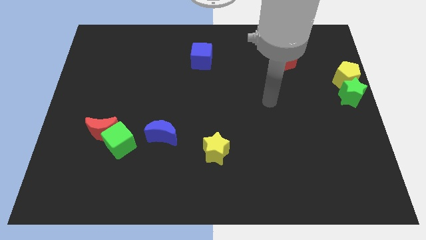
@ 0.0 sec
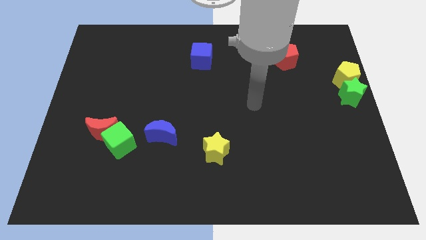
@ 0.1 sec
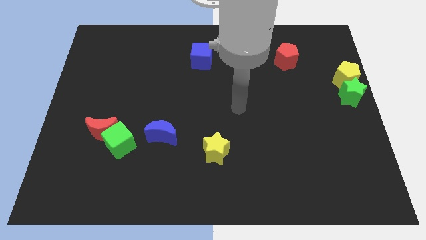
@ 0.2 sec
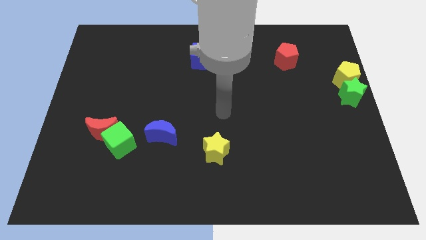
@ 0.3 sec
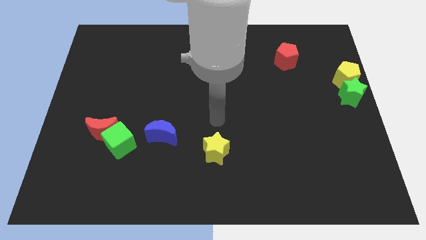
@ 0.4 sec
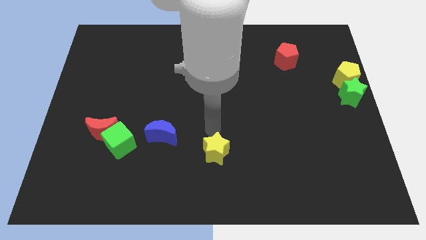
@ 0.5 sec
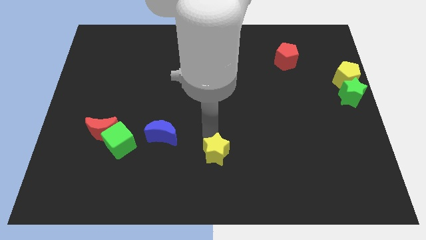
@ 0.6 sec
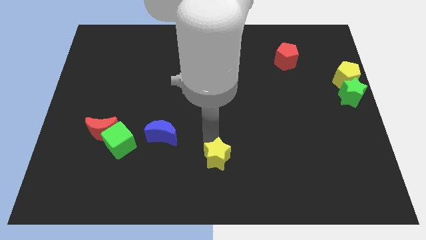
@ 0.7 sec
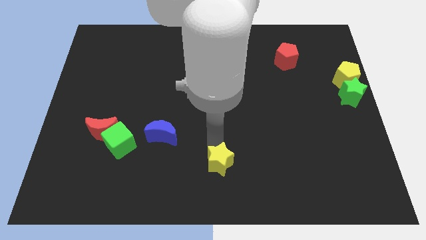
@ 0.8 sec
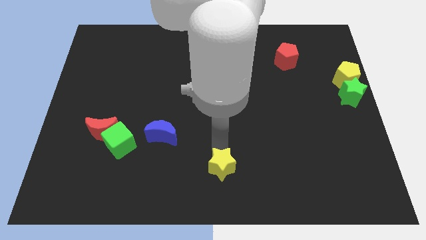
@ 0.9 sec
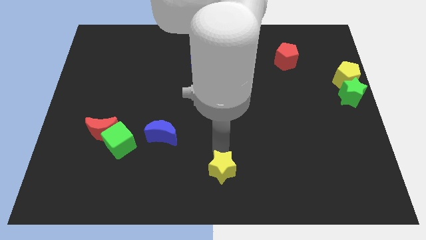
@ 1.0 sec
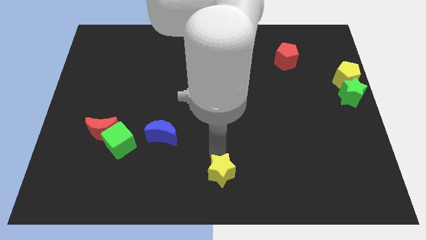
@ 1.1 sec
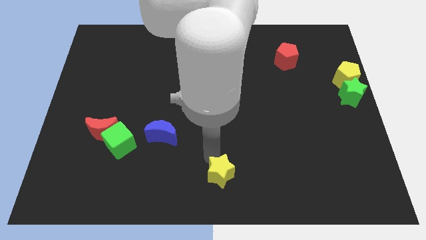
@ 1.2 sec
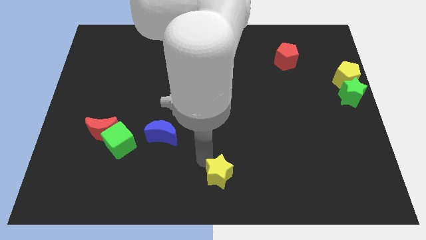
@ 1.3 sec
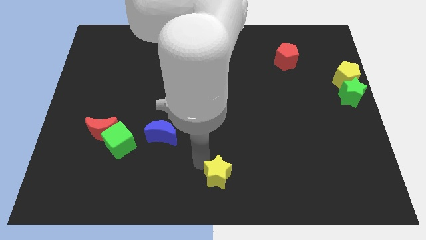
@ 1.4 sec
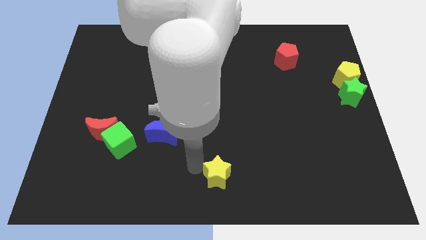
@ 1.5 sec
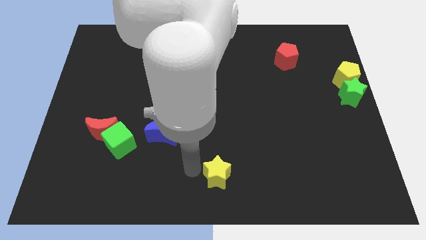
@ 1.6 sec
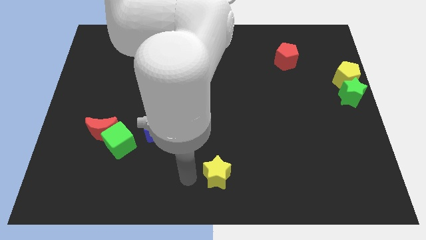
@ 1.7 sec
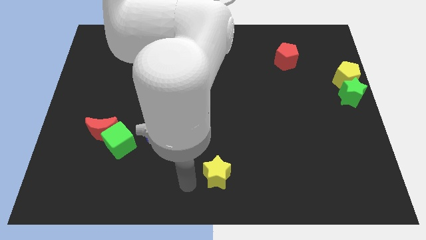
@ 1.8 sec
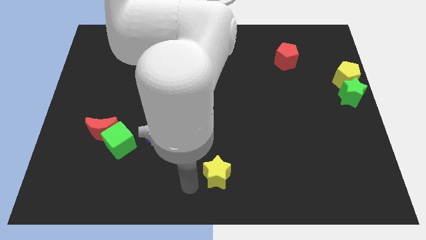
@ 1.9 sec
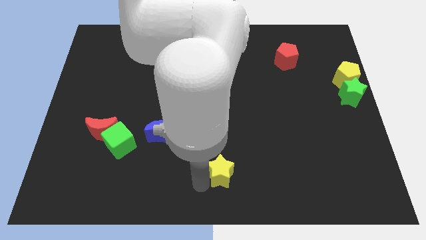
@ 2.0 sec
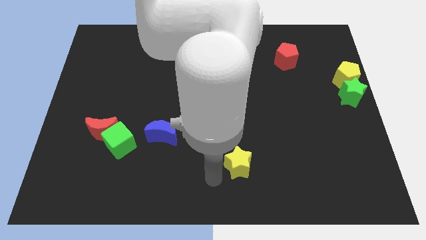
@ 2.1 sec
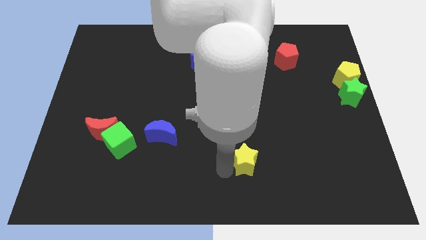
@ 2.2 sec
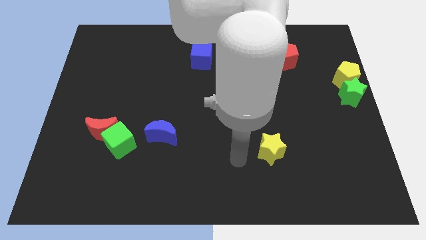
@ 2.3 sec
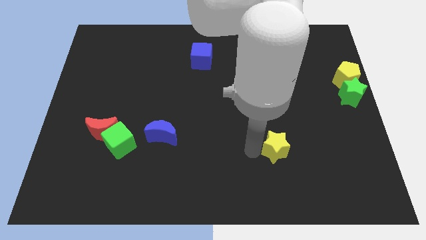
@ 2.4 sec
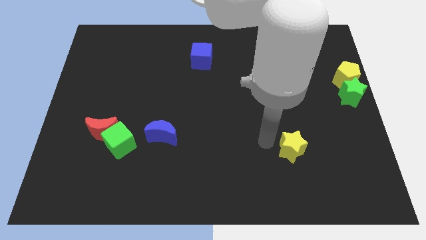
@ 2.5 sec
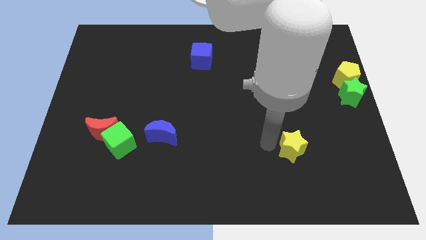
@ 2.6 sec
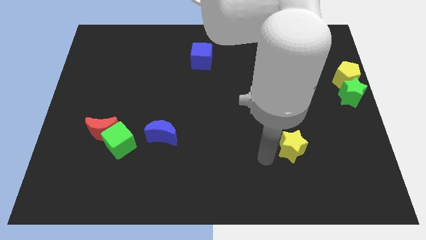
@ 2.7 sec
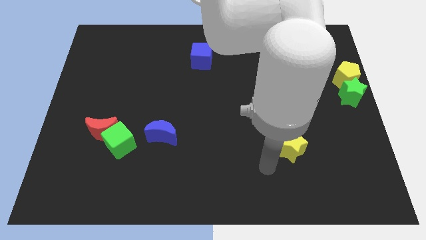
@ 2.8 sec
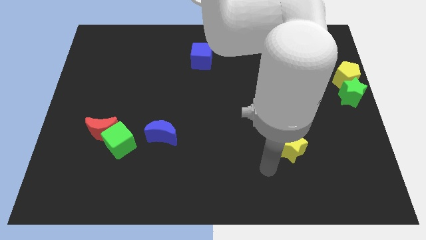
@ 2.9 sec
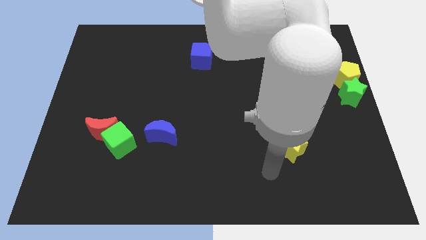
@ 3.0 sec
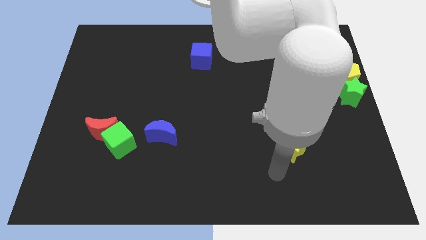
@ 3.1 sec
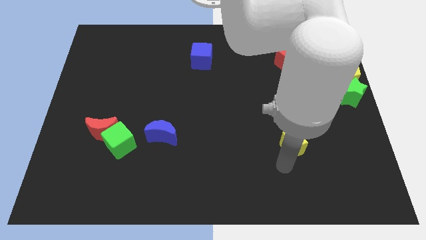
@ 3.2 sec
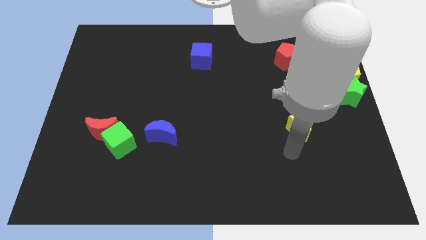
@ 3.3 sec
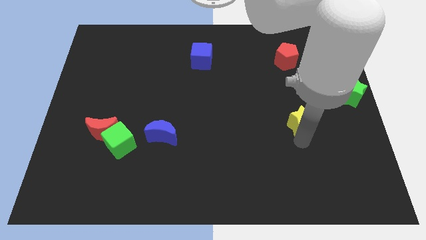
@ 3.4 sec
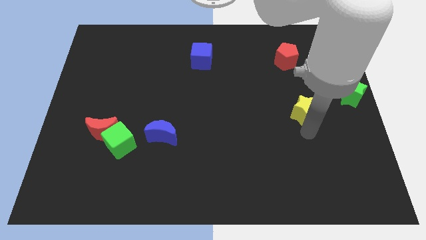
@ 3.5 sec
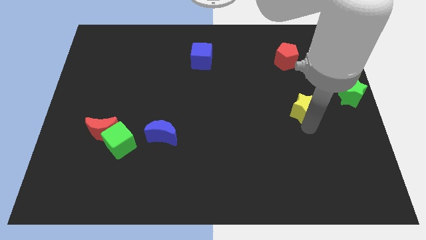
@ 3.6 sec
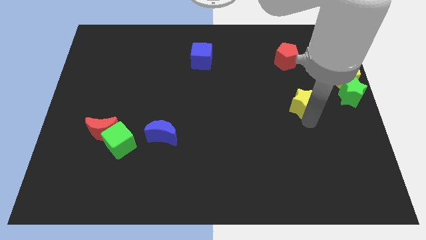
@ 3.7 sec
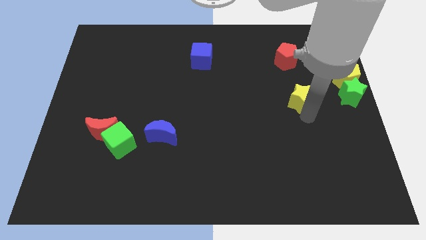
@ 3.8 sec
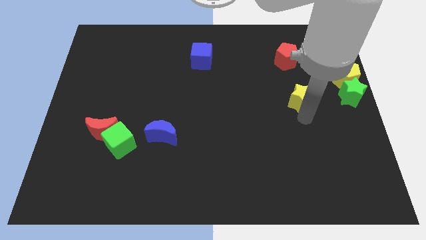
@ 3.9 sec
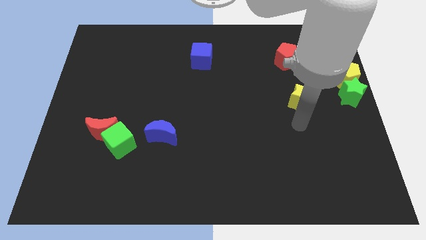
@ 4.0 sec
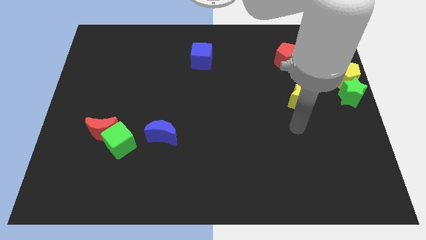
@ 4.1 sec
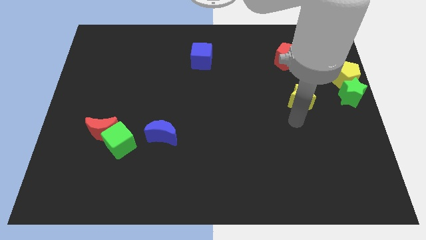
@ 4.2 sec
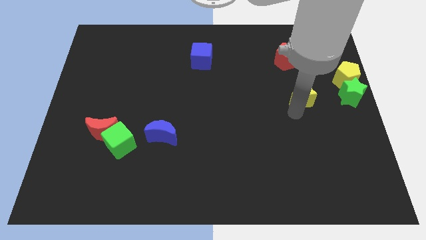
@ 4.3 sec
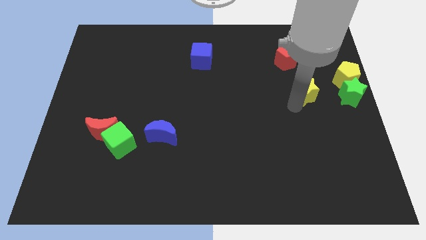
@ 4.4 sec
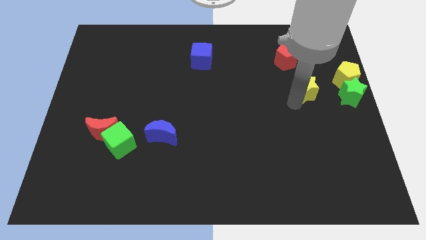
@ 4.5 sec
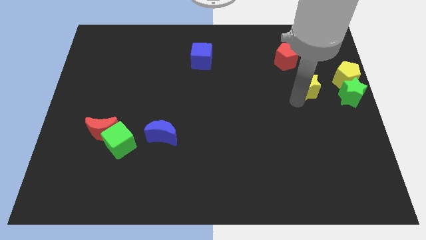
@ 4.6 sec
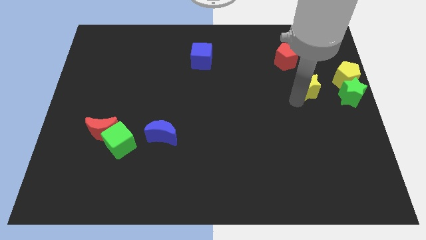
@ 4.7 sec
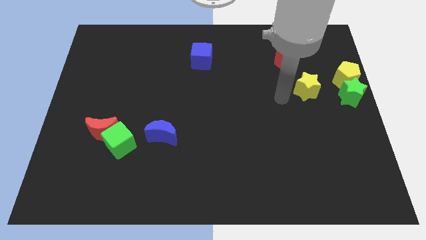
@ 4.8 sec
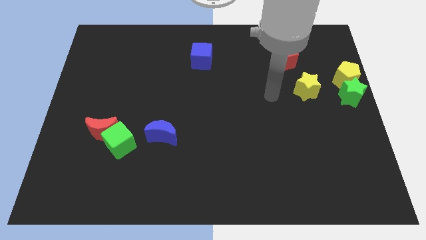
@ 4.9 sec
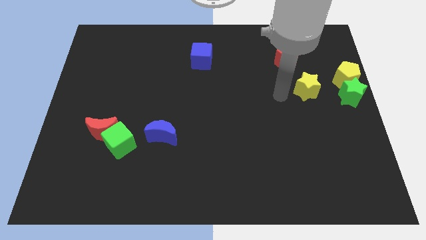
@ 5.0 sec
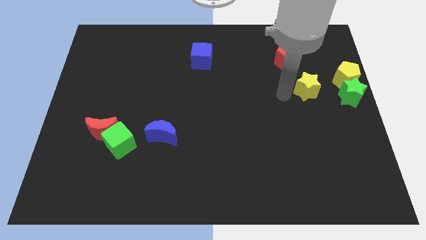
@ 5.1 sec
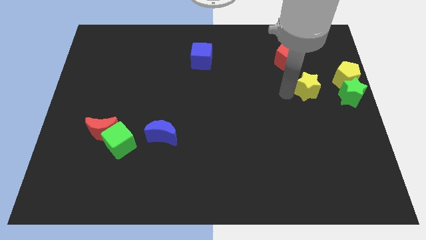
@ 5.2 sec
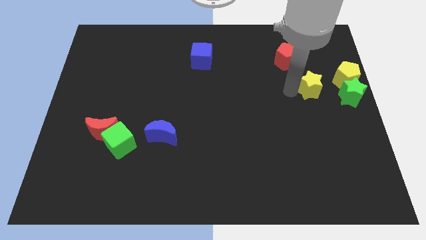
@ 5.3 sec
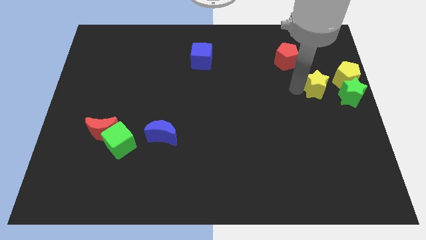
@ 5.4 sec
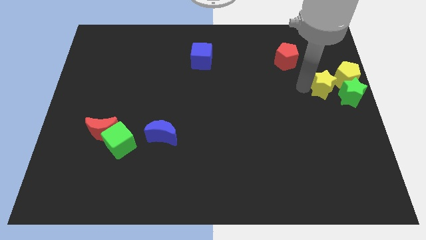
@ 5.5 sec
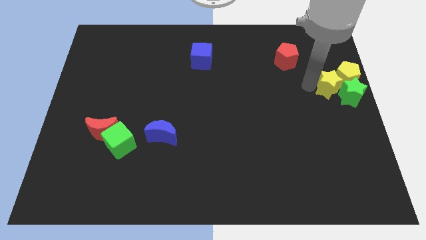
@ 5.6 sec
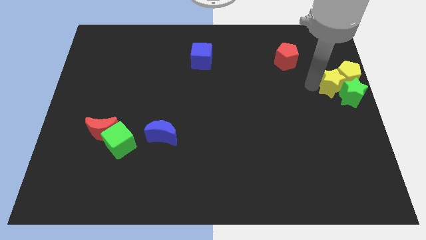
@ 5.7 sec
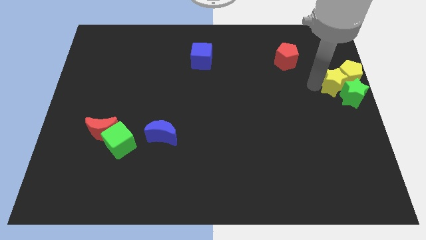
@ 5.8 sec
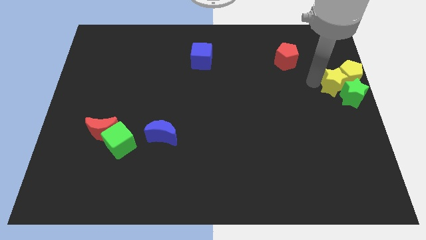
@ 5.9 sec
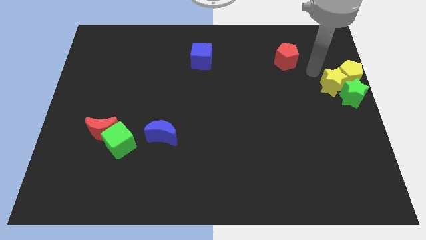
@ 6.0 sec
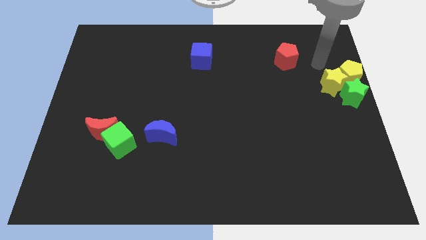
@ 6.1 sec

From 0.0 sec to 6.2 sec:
move the yellow star into the yellow pentagon

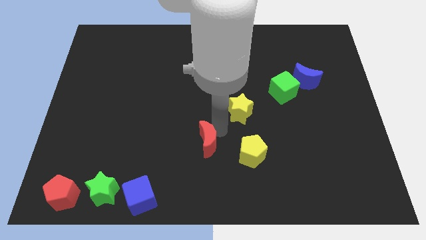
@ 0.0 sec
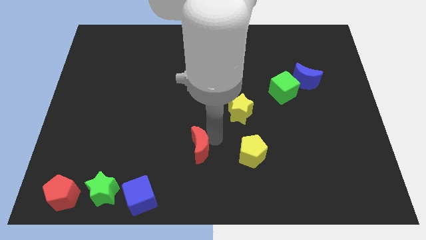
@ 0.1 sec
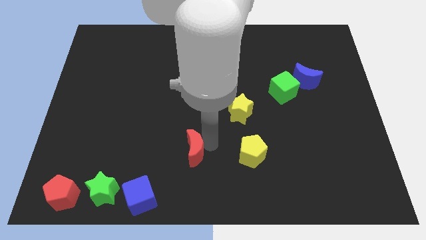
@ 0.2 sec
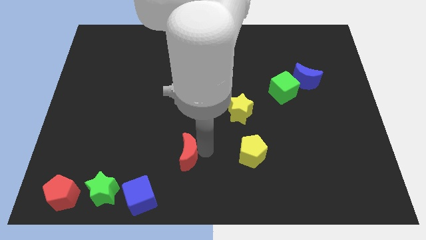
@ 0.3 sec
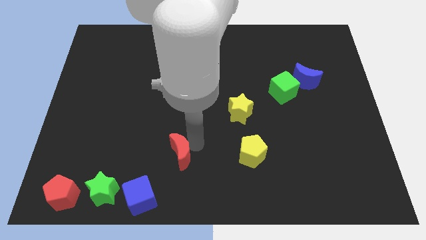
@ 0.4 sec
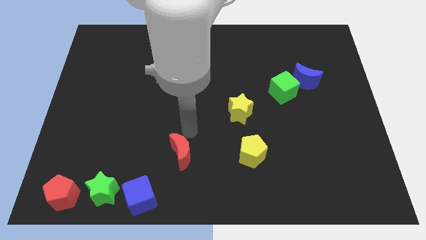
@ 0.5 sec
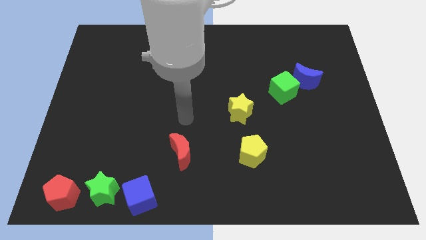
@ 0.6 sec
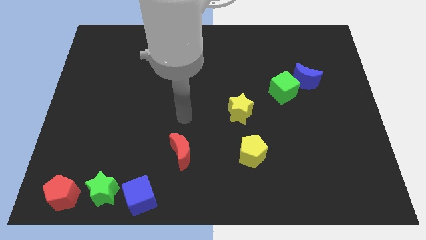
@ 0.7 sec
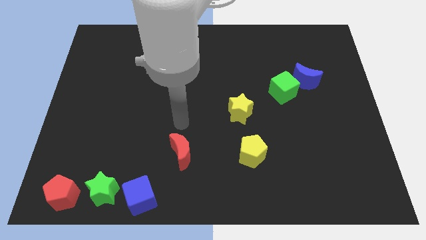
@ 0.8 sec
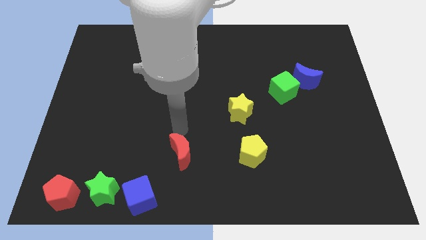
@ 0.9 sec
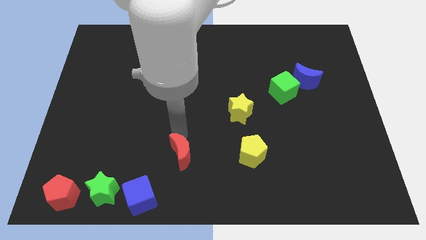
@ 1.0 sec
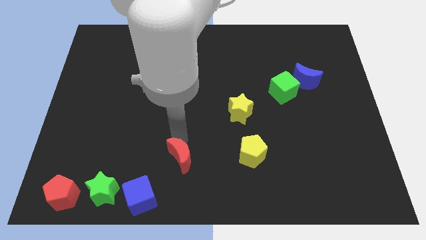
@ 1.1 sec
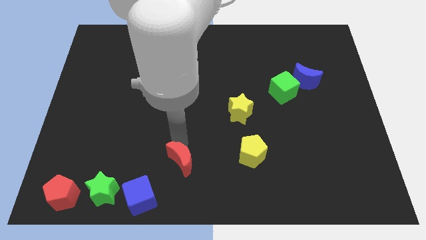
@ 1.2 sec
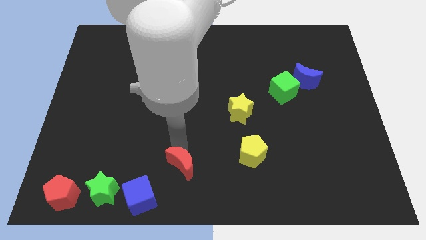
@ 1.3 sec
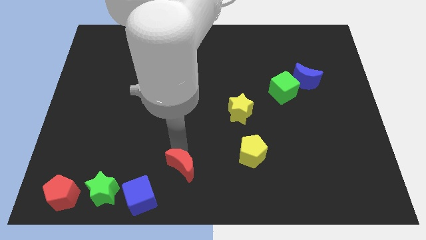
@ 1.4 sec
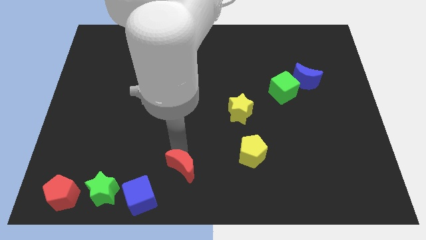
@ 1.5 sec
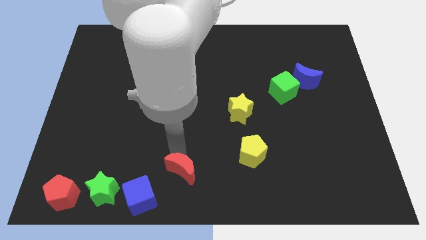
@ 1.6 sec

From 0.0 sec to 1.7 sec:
move the red moon diagonally left of the yellow pentagon

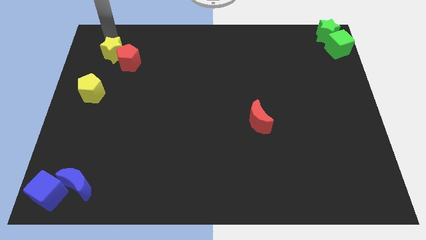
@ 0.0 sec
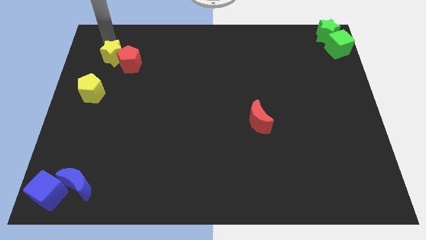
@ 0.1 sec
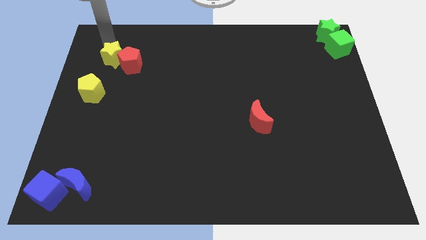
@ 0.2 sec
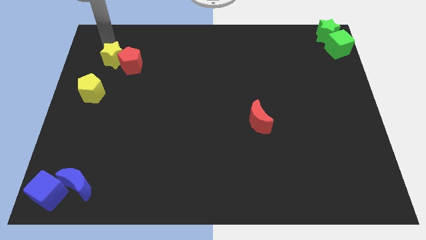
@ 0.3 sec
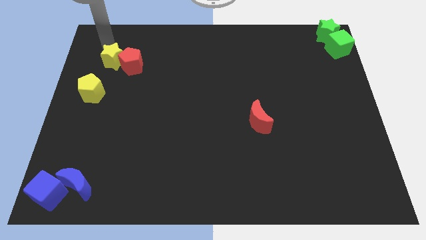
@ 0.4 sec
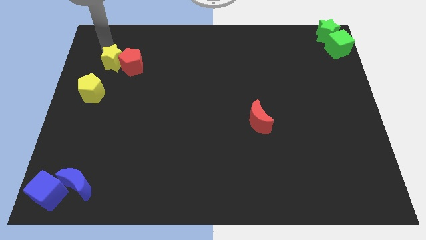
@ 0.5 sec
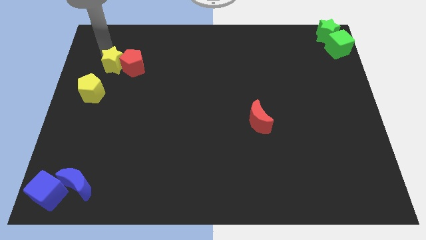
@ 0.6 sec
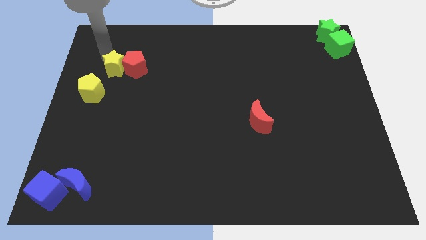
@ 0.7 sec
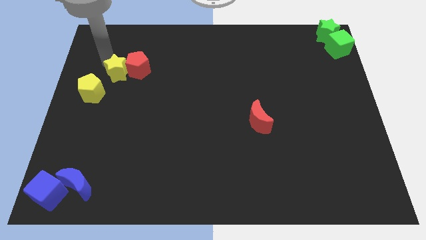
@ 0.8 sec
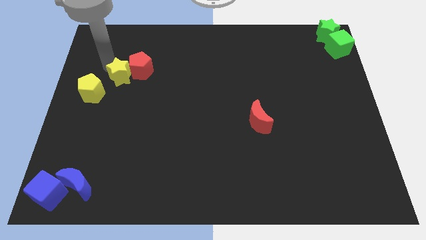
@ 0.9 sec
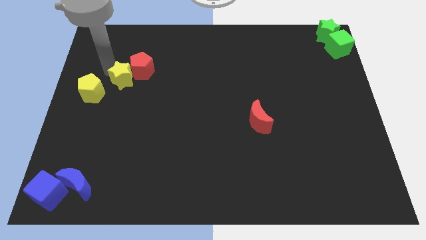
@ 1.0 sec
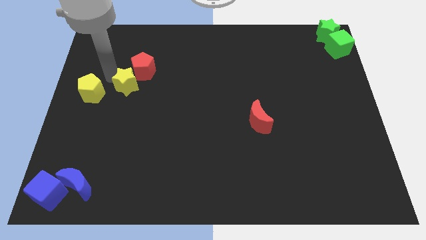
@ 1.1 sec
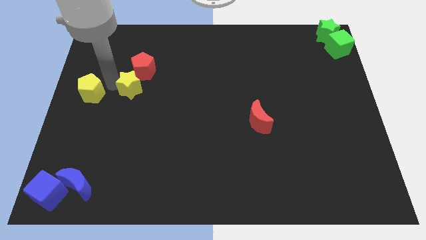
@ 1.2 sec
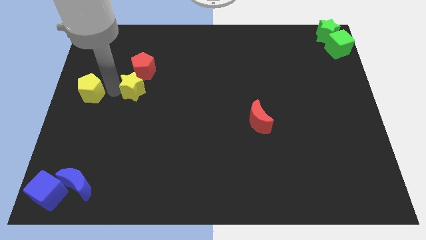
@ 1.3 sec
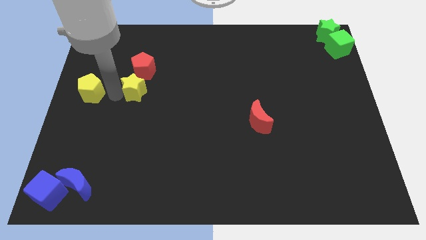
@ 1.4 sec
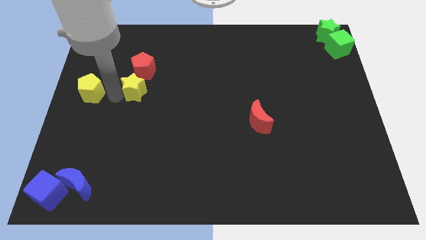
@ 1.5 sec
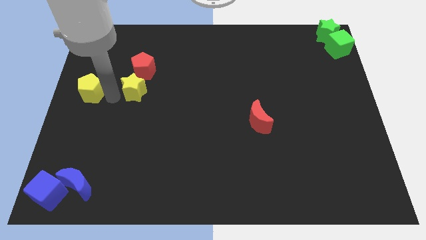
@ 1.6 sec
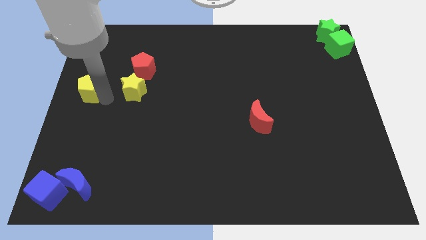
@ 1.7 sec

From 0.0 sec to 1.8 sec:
push the yellow star to the bottom side of the red pentagon
